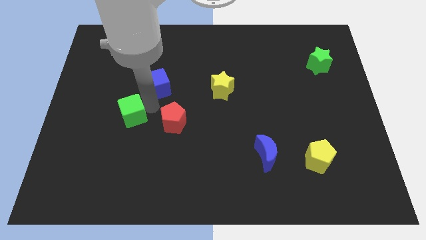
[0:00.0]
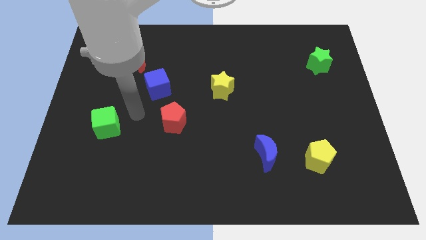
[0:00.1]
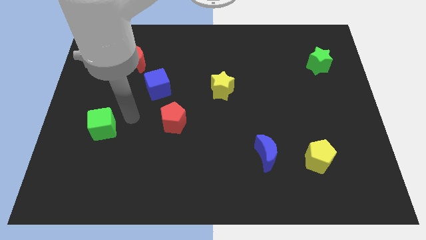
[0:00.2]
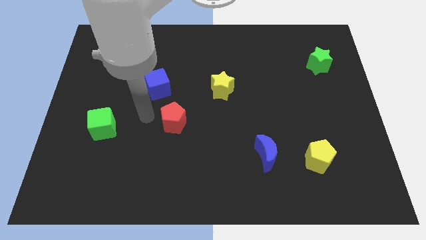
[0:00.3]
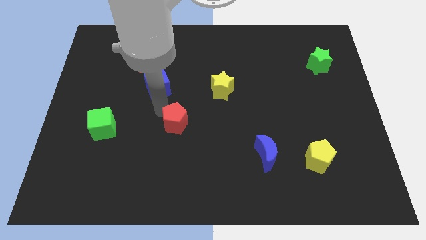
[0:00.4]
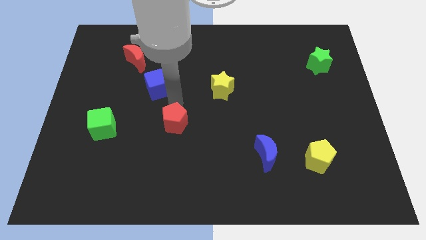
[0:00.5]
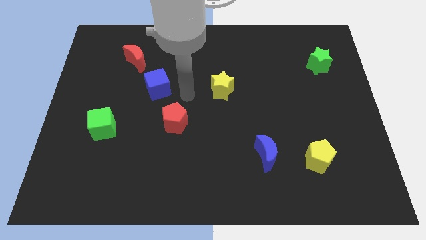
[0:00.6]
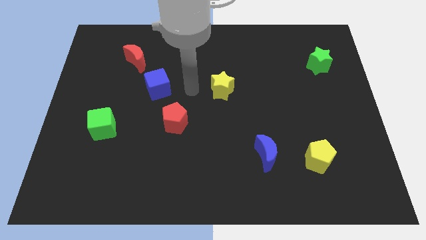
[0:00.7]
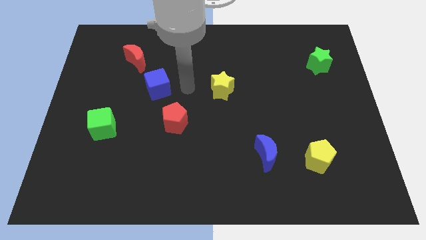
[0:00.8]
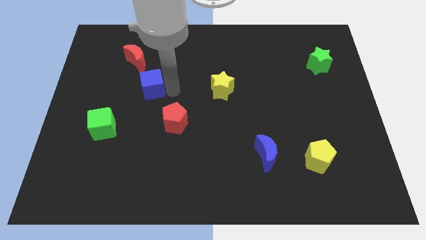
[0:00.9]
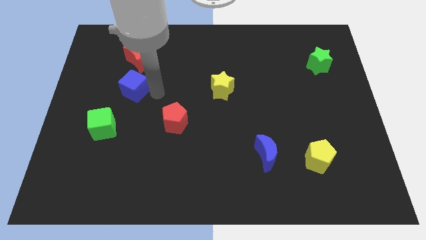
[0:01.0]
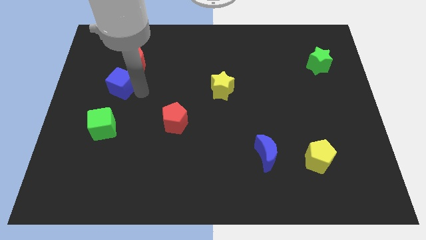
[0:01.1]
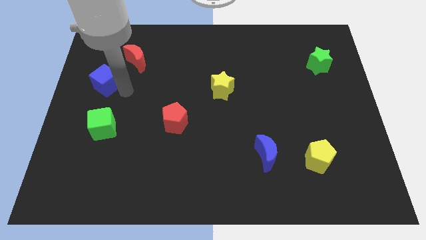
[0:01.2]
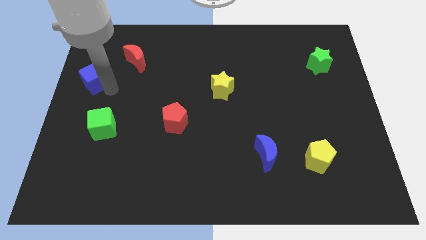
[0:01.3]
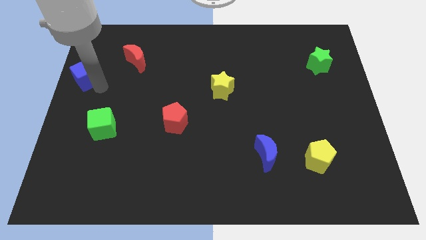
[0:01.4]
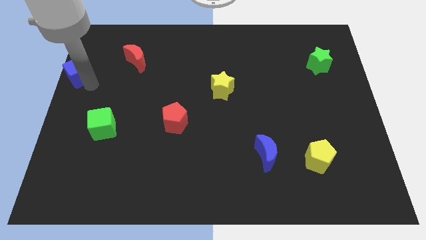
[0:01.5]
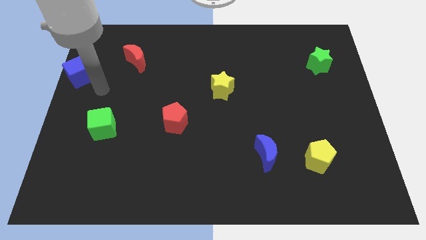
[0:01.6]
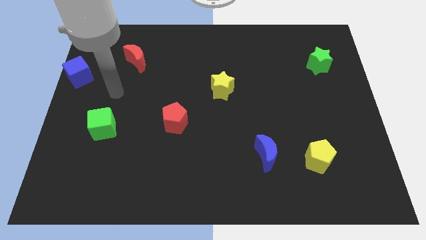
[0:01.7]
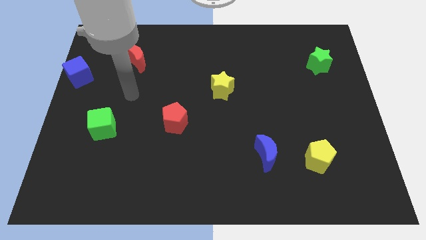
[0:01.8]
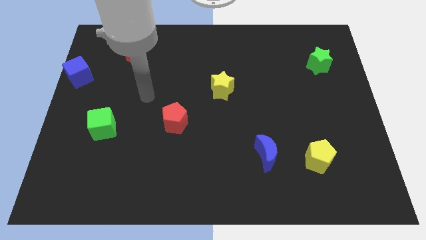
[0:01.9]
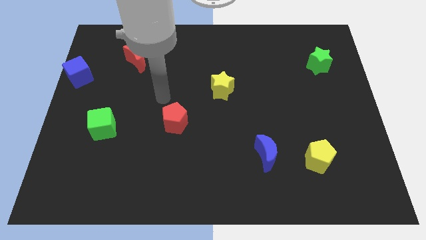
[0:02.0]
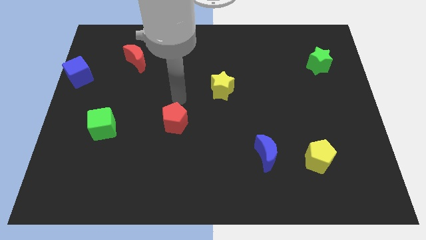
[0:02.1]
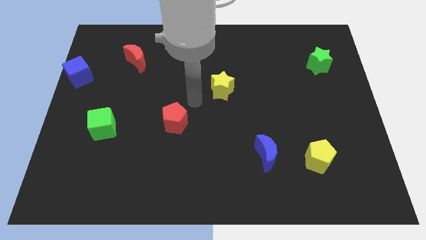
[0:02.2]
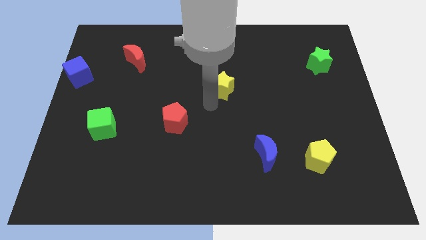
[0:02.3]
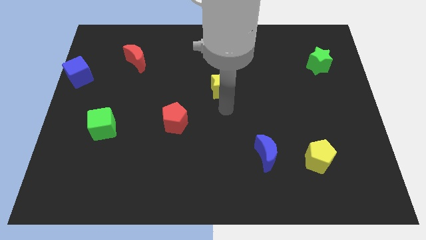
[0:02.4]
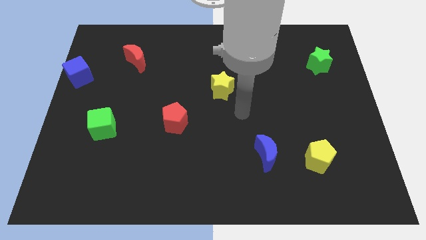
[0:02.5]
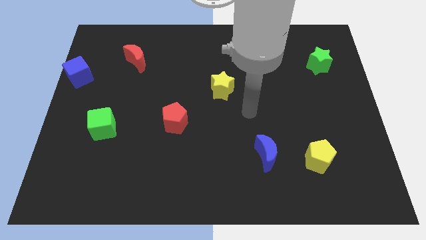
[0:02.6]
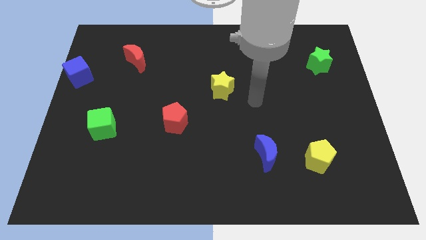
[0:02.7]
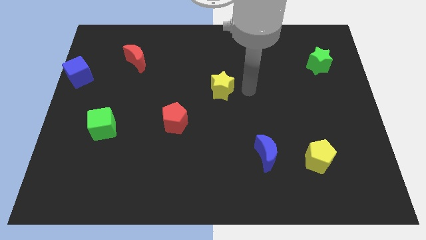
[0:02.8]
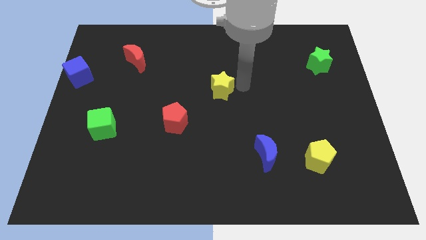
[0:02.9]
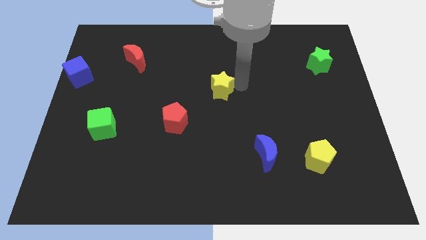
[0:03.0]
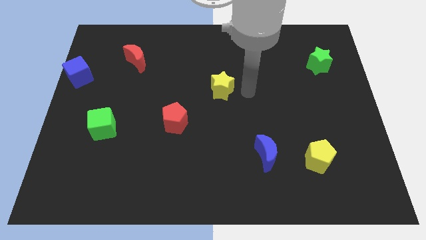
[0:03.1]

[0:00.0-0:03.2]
move the blue cube towards the left

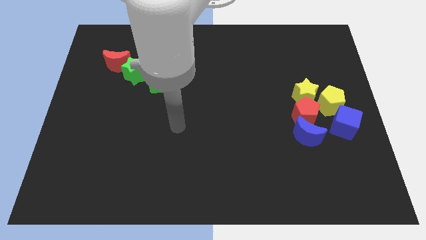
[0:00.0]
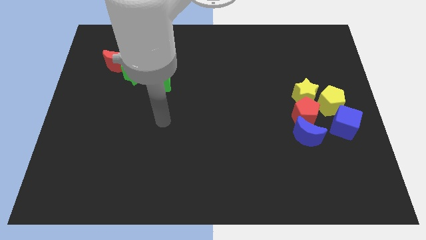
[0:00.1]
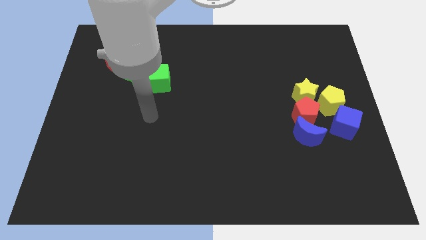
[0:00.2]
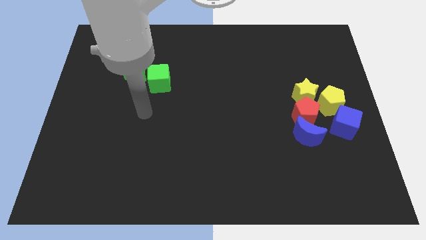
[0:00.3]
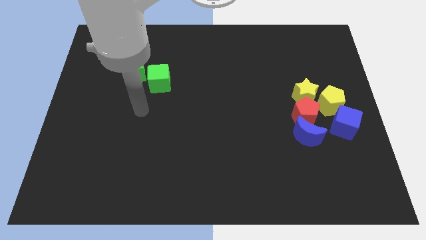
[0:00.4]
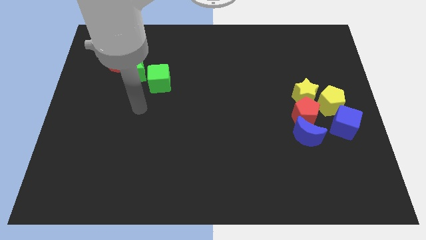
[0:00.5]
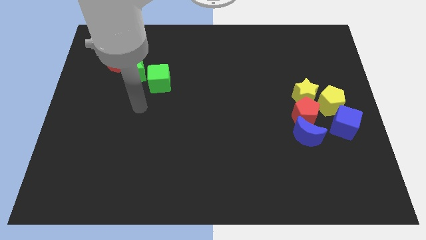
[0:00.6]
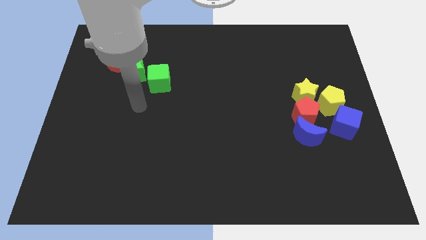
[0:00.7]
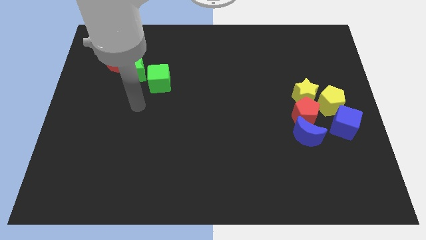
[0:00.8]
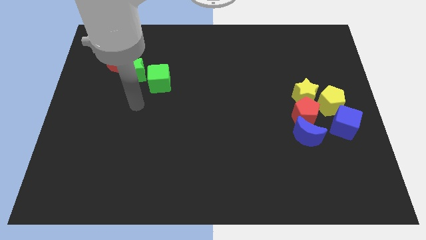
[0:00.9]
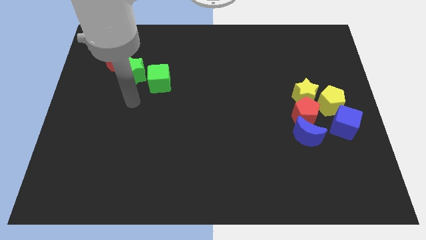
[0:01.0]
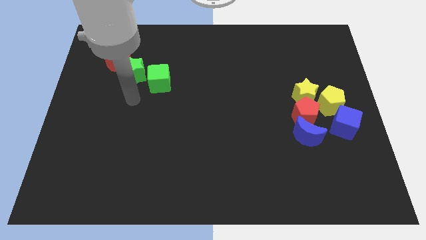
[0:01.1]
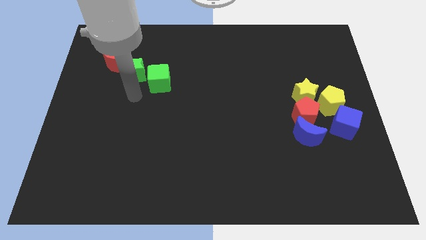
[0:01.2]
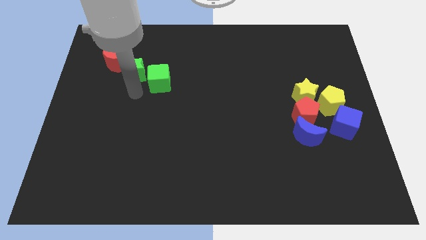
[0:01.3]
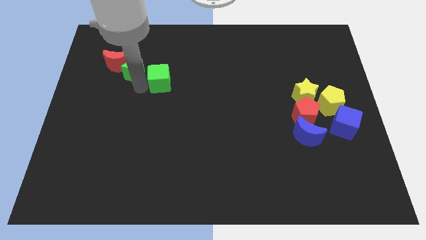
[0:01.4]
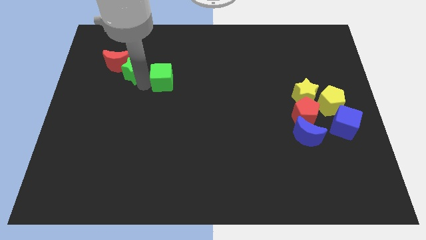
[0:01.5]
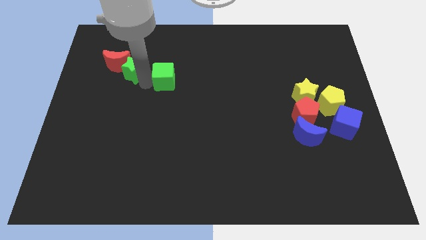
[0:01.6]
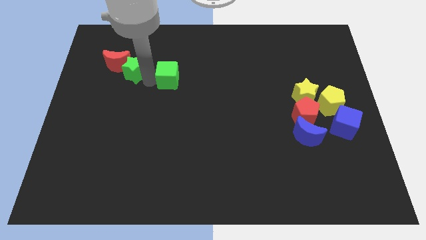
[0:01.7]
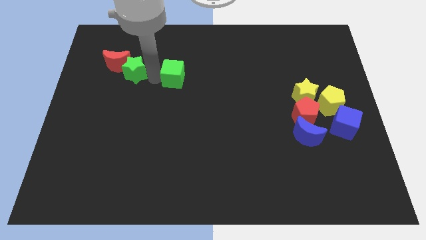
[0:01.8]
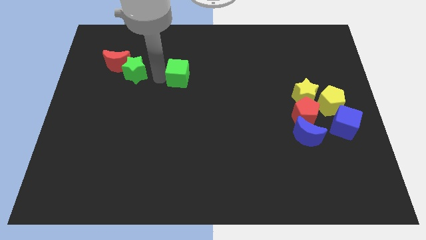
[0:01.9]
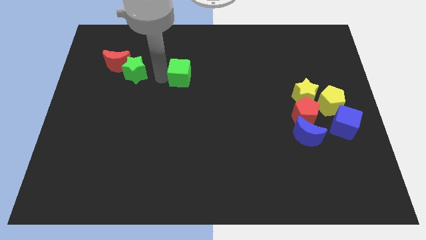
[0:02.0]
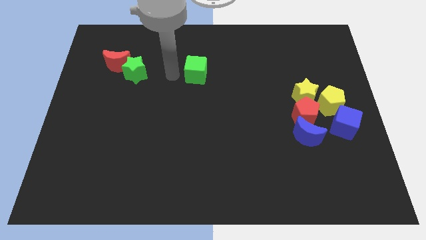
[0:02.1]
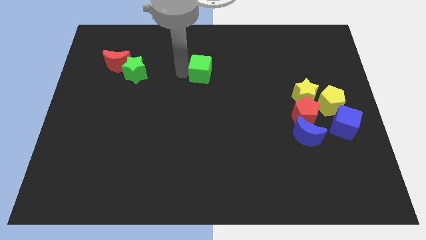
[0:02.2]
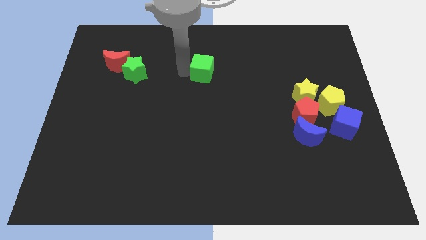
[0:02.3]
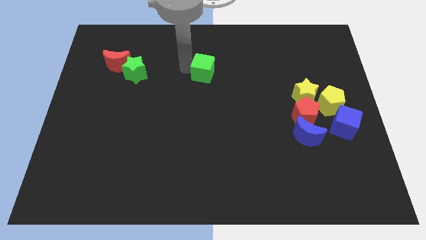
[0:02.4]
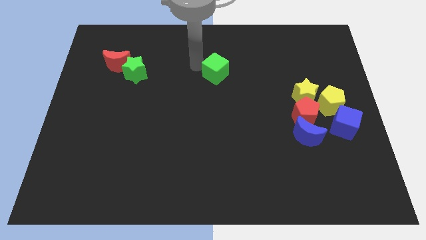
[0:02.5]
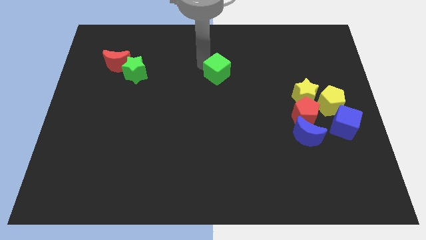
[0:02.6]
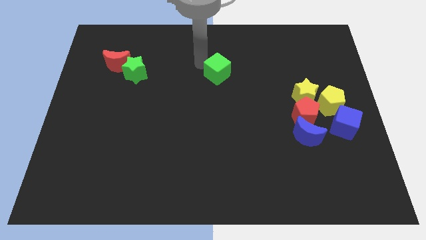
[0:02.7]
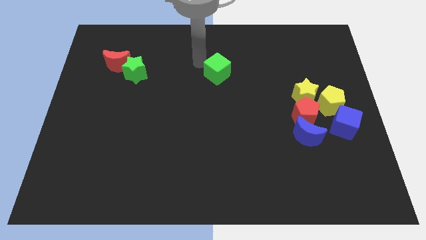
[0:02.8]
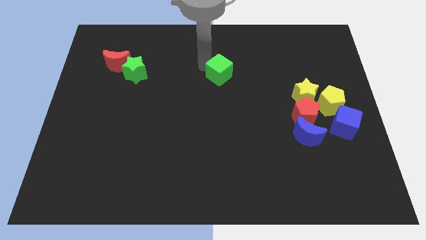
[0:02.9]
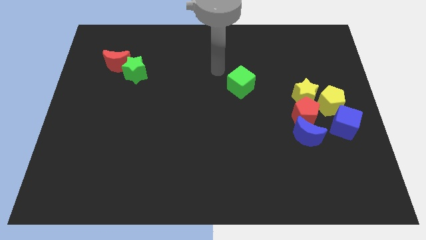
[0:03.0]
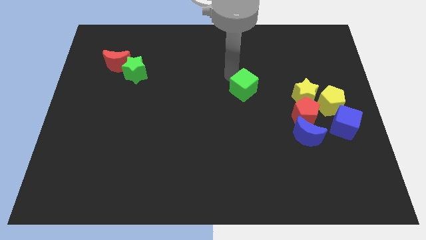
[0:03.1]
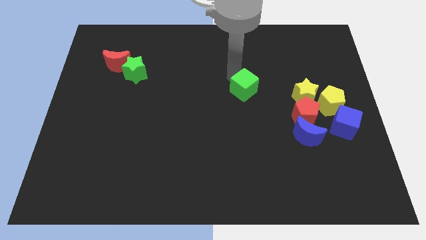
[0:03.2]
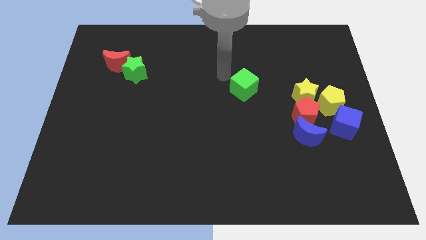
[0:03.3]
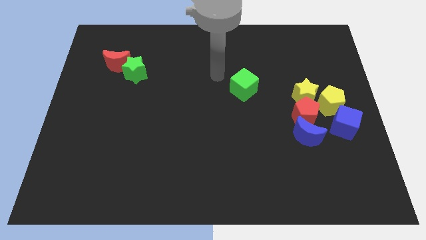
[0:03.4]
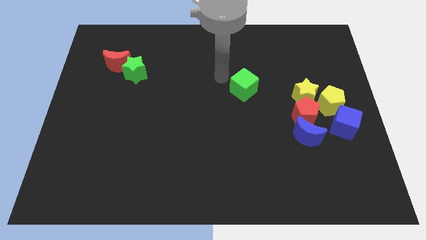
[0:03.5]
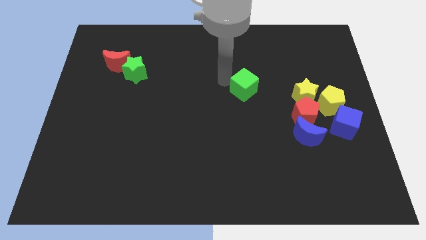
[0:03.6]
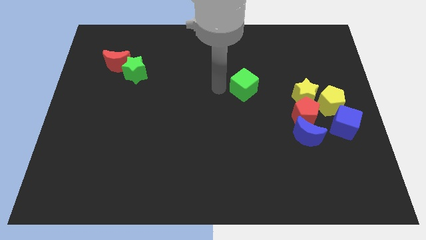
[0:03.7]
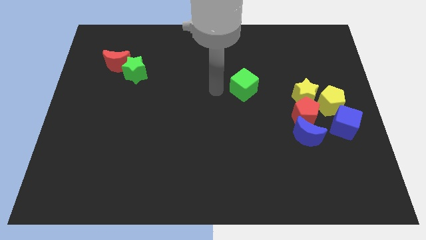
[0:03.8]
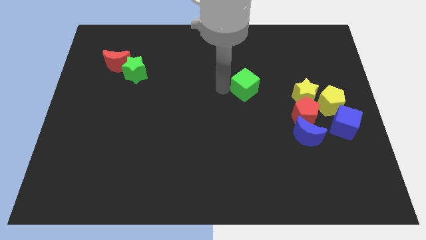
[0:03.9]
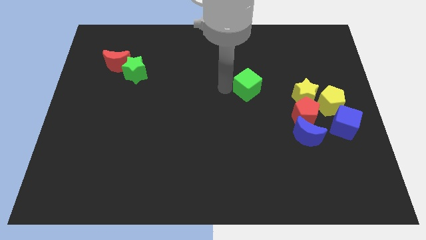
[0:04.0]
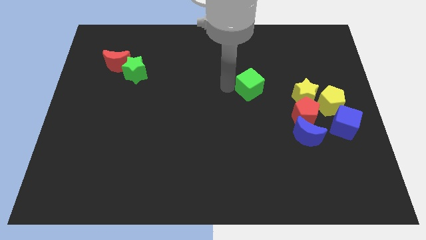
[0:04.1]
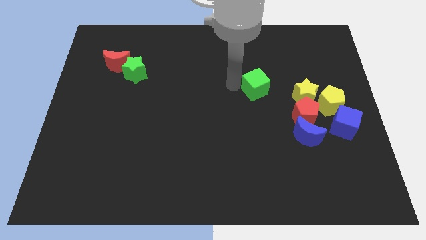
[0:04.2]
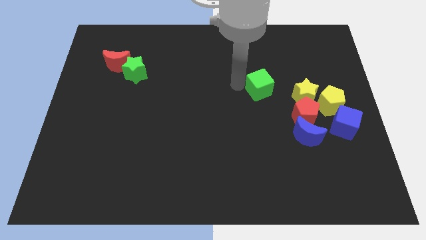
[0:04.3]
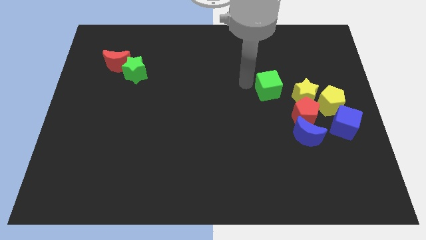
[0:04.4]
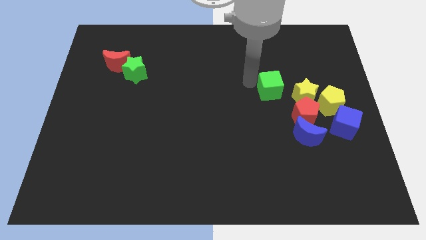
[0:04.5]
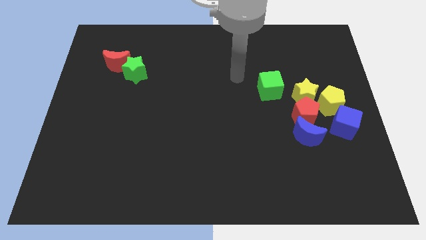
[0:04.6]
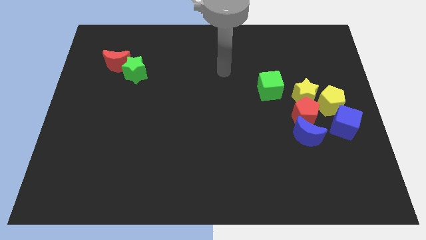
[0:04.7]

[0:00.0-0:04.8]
separate green cube from green star

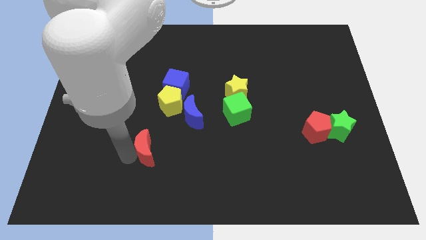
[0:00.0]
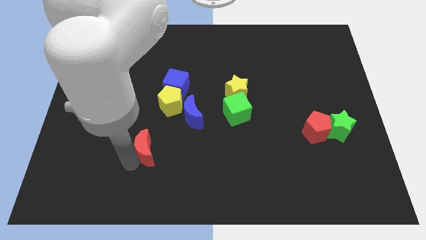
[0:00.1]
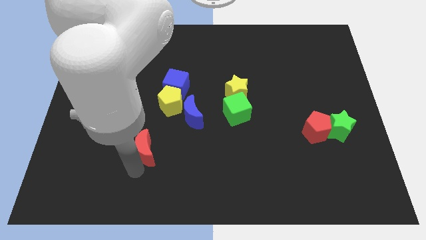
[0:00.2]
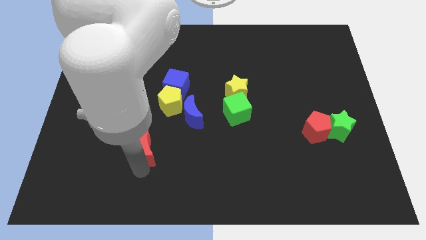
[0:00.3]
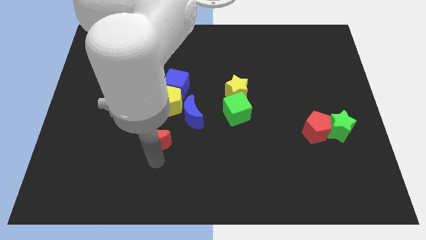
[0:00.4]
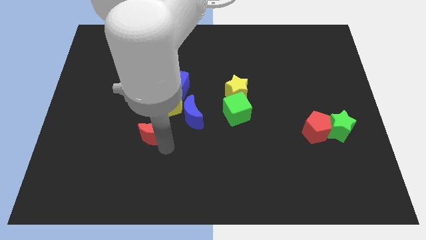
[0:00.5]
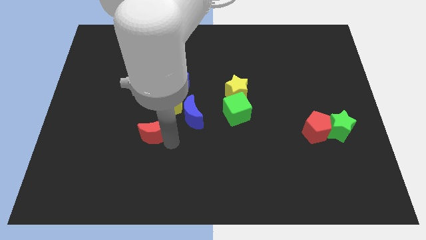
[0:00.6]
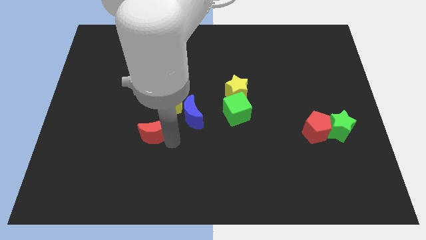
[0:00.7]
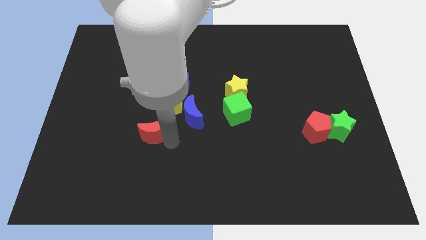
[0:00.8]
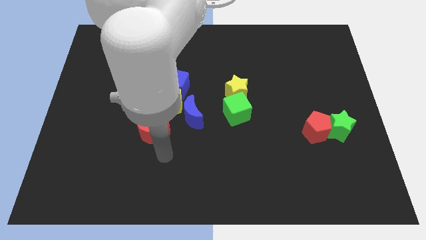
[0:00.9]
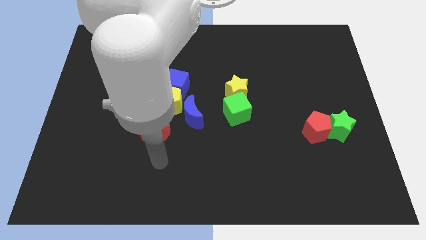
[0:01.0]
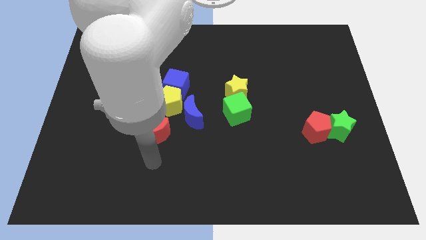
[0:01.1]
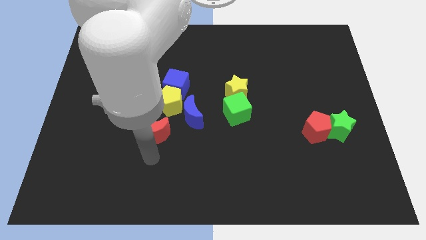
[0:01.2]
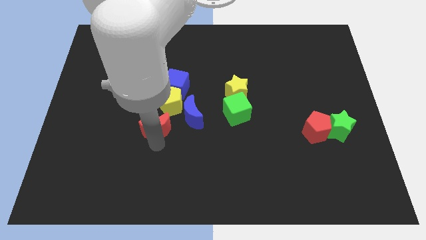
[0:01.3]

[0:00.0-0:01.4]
slide the red moon vertically below the yellow pentagon
